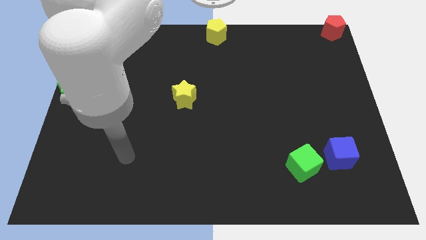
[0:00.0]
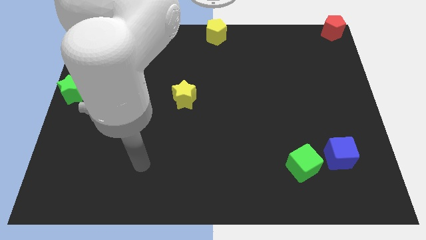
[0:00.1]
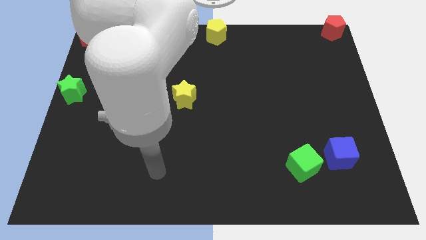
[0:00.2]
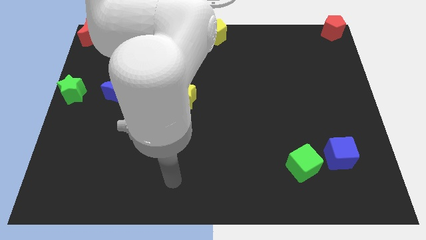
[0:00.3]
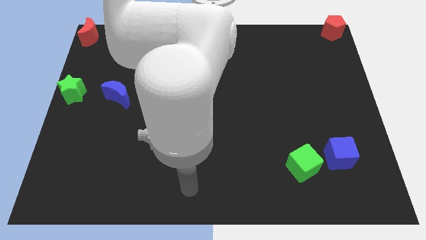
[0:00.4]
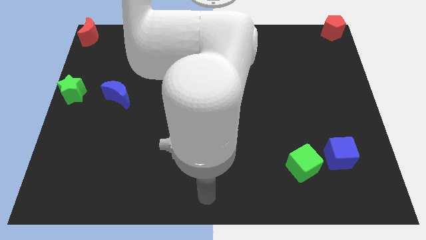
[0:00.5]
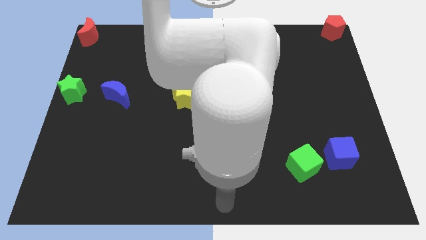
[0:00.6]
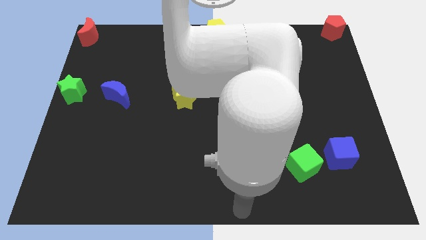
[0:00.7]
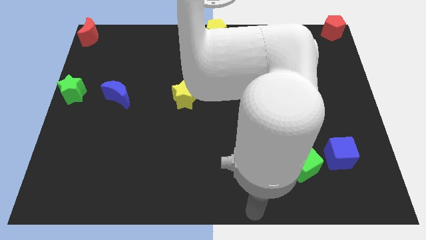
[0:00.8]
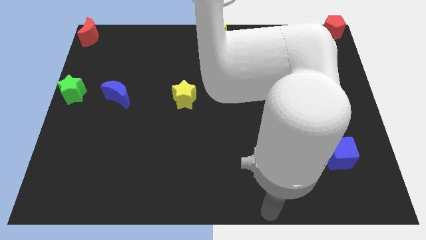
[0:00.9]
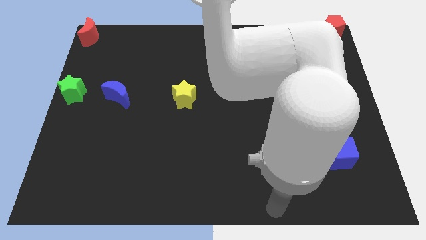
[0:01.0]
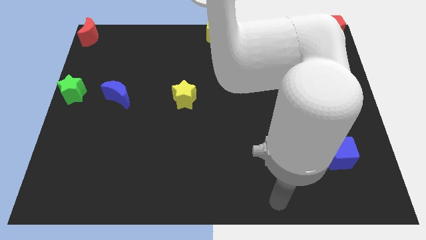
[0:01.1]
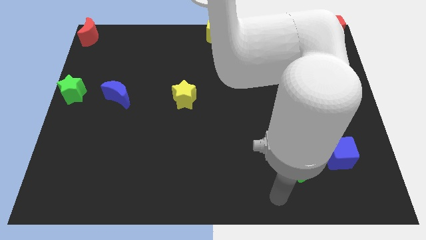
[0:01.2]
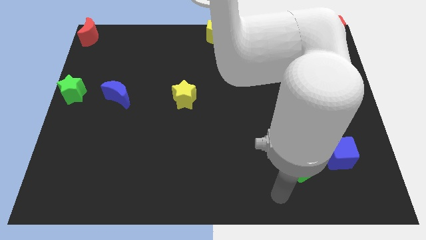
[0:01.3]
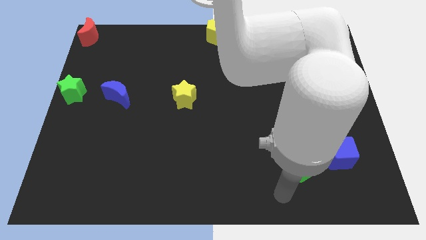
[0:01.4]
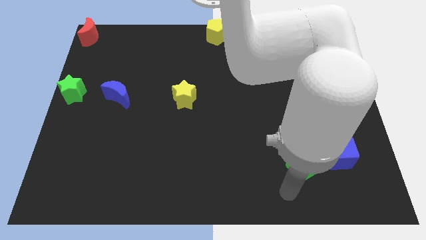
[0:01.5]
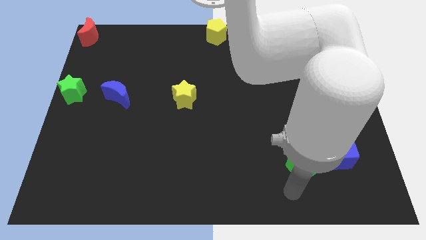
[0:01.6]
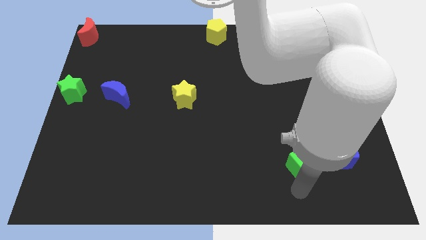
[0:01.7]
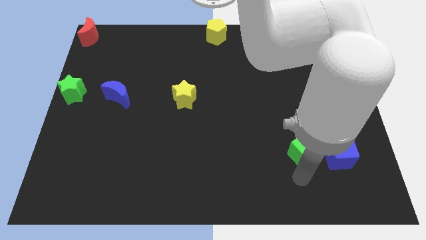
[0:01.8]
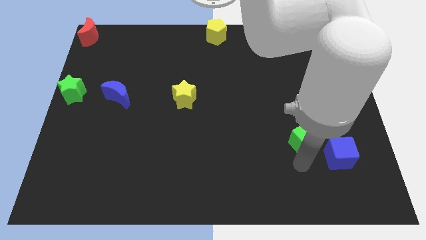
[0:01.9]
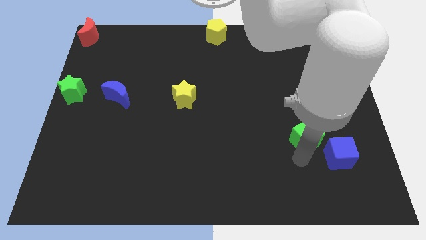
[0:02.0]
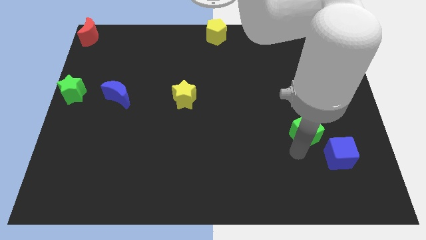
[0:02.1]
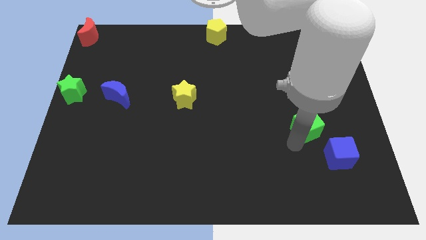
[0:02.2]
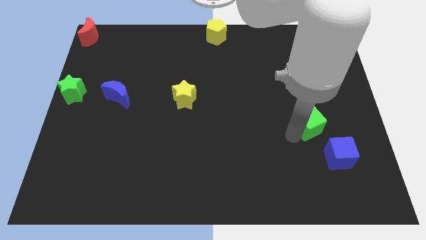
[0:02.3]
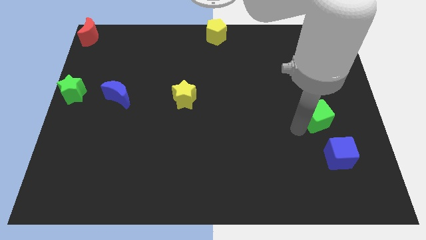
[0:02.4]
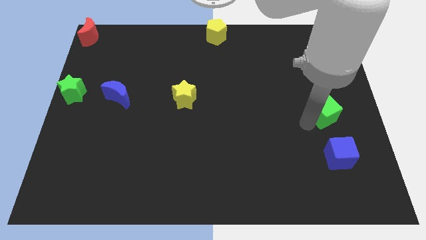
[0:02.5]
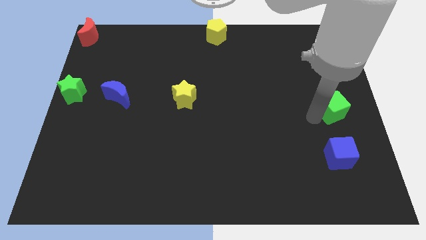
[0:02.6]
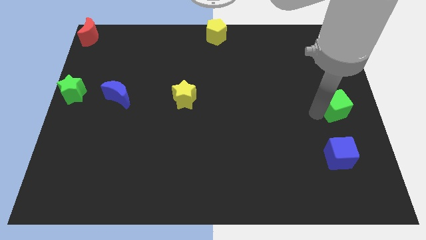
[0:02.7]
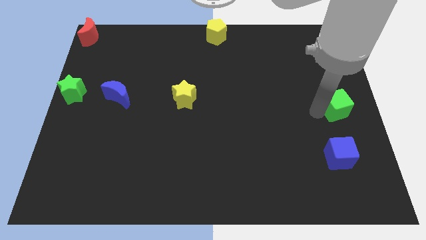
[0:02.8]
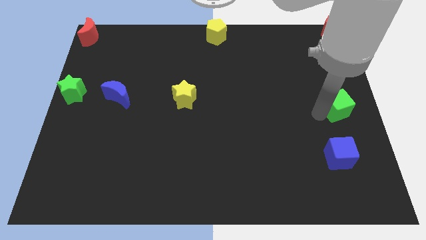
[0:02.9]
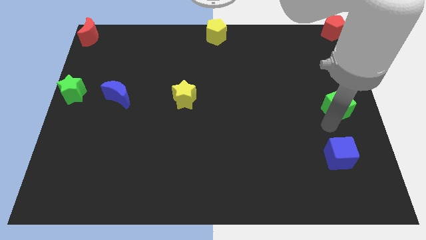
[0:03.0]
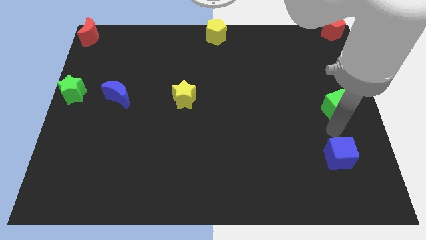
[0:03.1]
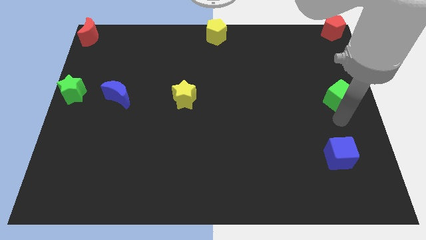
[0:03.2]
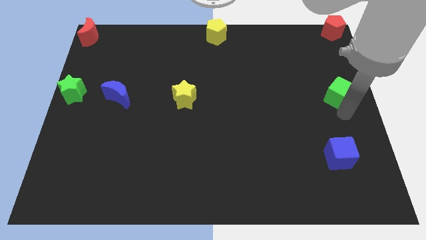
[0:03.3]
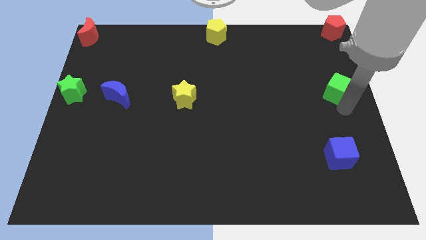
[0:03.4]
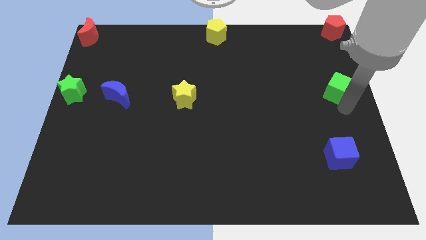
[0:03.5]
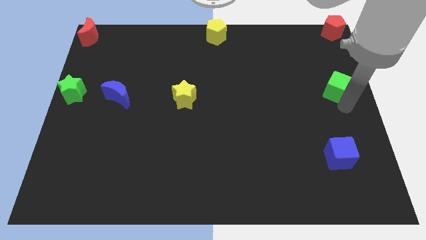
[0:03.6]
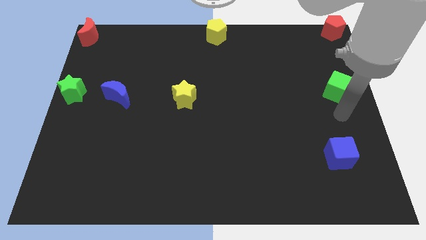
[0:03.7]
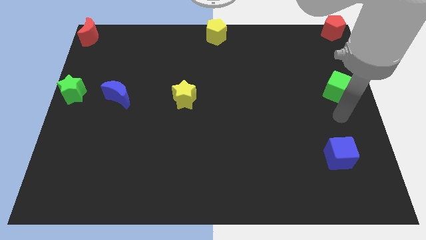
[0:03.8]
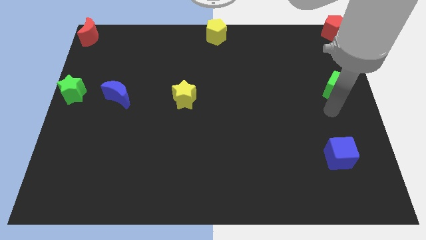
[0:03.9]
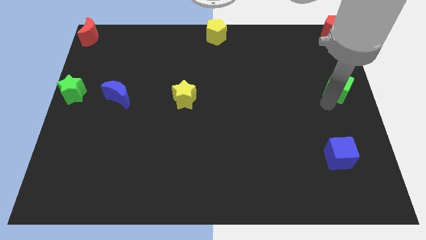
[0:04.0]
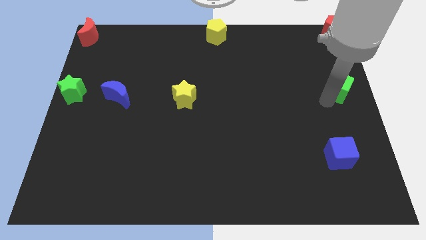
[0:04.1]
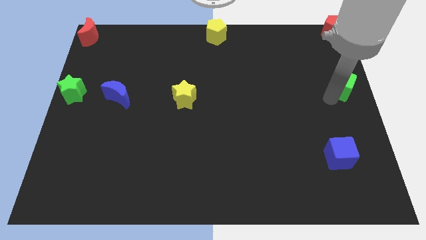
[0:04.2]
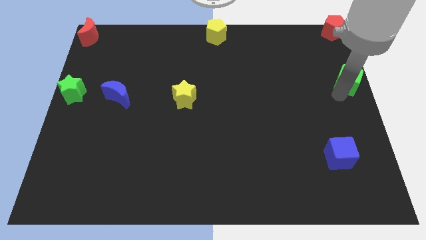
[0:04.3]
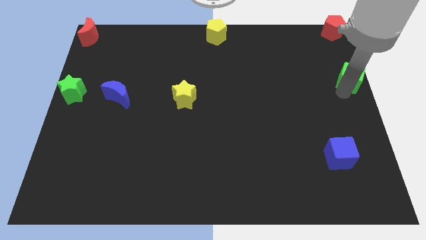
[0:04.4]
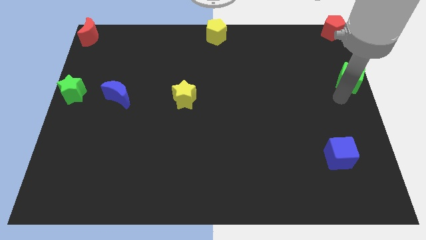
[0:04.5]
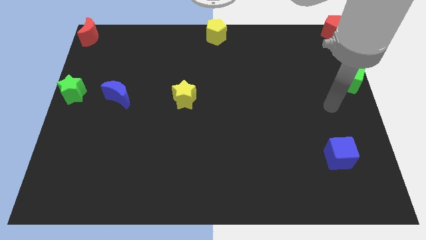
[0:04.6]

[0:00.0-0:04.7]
drag the green cube towards the center right of the board

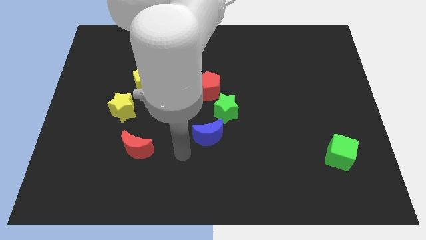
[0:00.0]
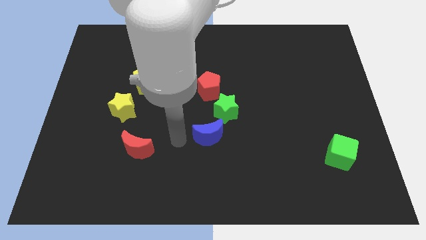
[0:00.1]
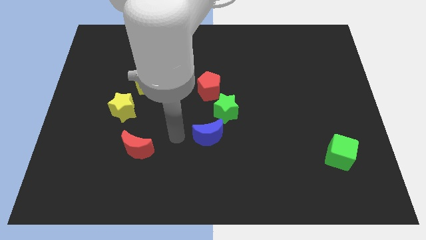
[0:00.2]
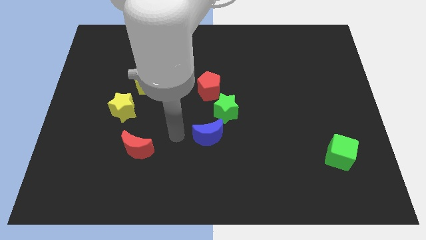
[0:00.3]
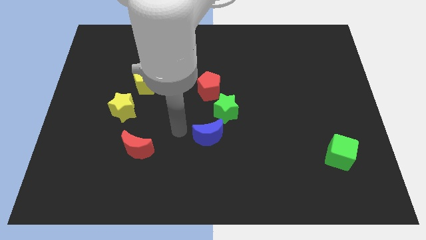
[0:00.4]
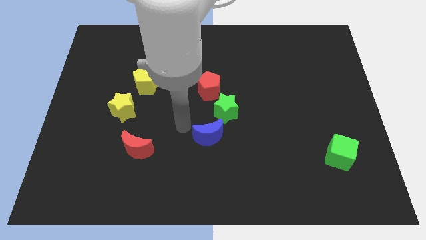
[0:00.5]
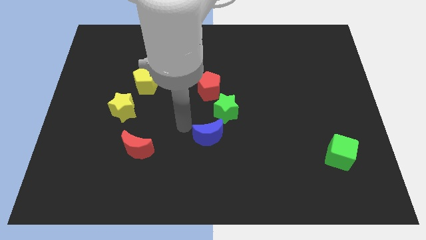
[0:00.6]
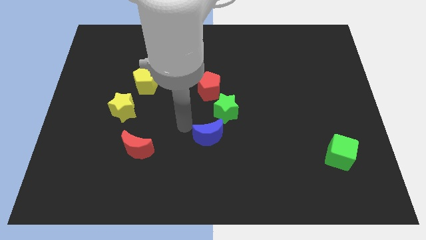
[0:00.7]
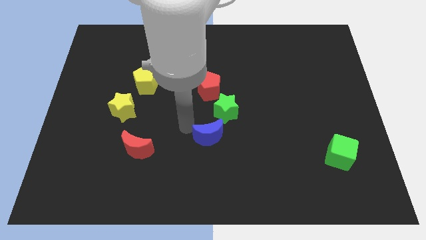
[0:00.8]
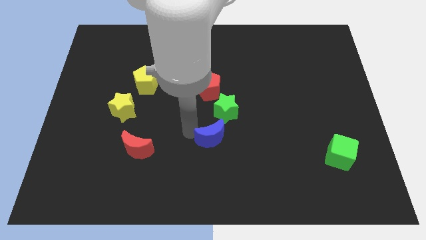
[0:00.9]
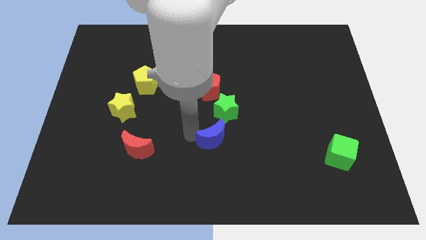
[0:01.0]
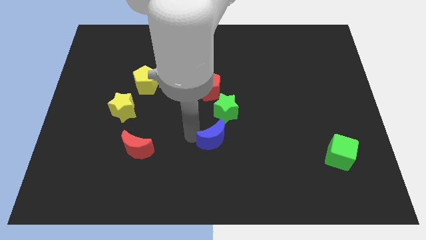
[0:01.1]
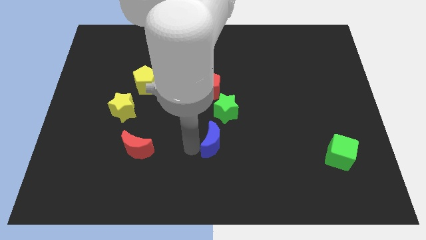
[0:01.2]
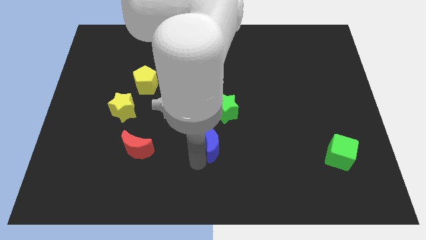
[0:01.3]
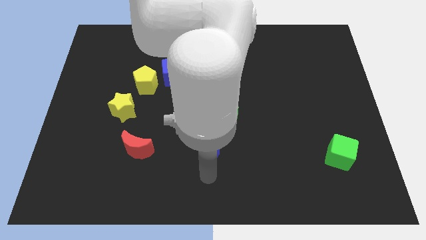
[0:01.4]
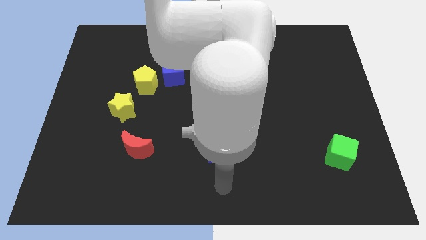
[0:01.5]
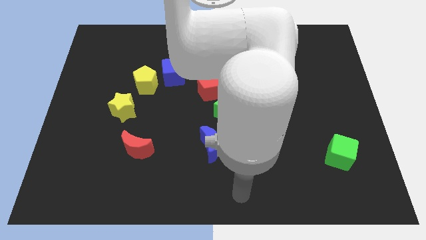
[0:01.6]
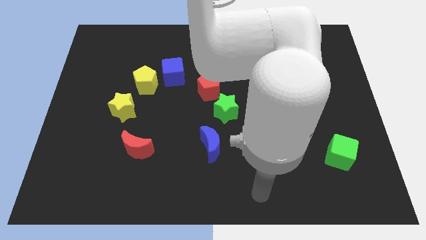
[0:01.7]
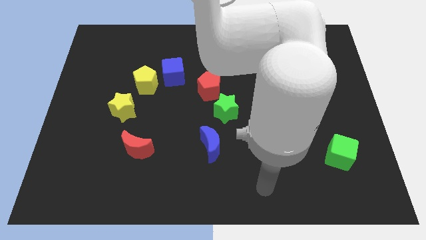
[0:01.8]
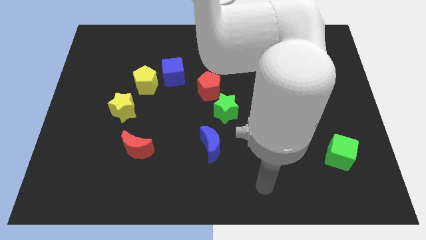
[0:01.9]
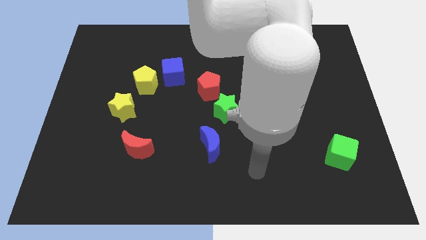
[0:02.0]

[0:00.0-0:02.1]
slightly turn the blue moon towards red moon

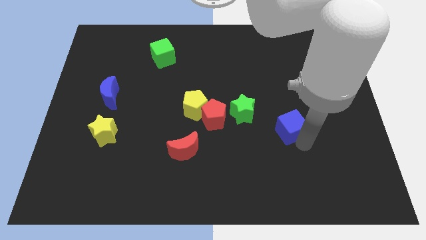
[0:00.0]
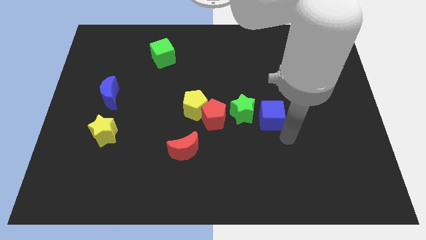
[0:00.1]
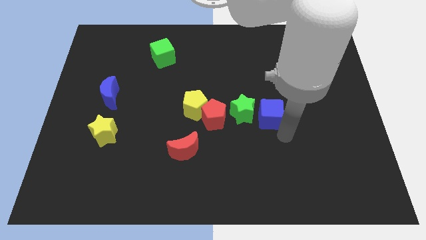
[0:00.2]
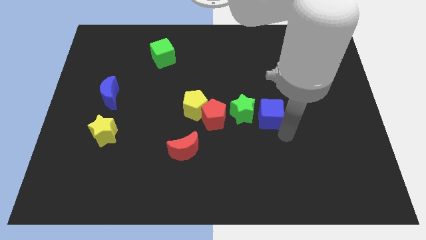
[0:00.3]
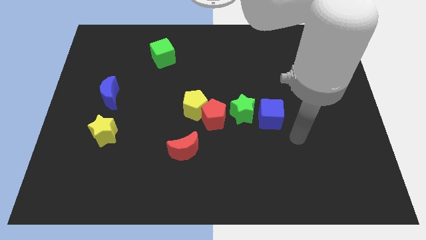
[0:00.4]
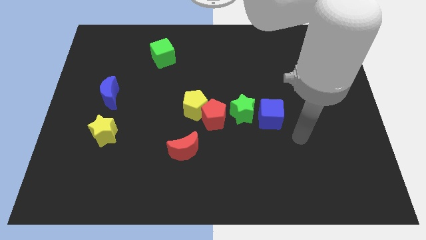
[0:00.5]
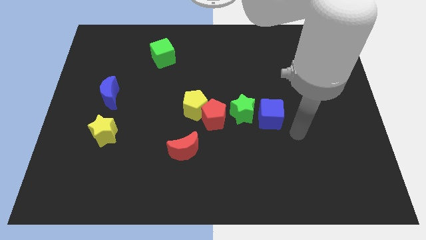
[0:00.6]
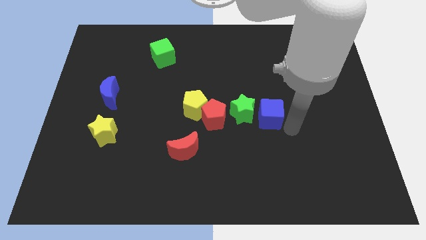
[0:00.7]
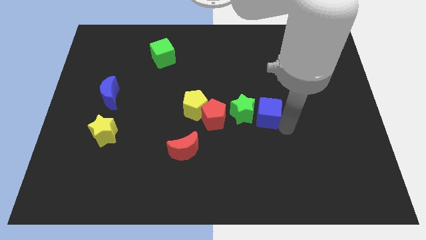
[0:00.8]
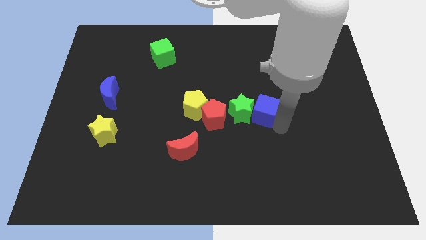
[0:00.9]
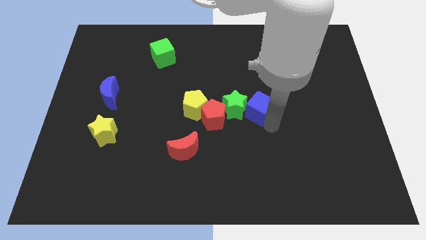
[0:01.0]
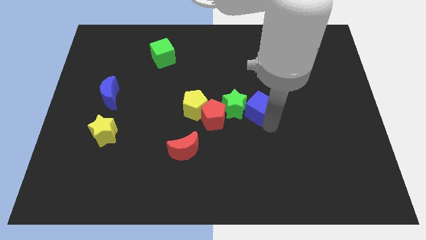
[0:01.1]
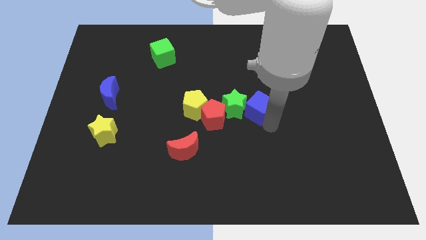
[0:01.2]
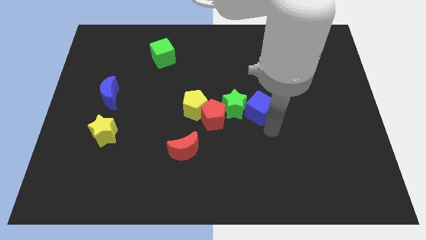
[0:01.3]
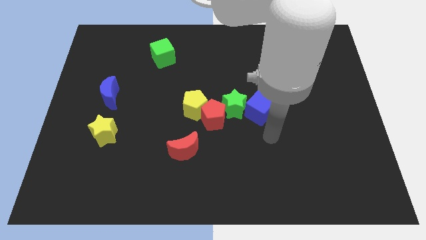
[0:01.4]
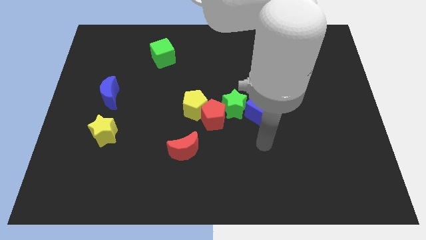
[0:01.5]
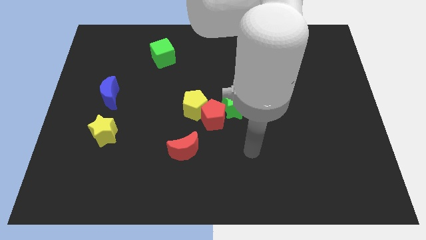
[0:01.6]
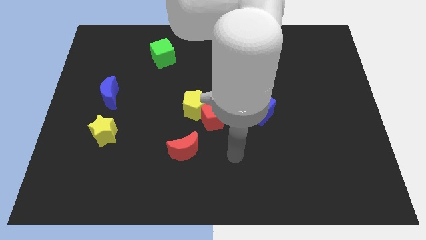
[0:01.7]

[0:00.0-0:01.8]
put the blue cube into green star to the right

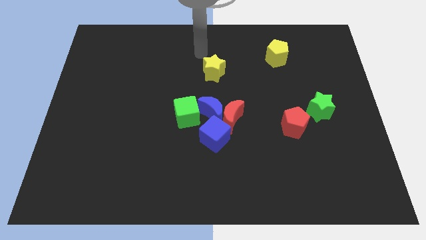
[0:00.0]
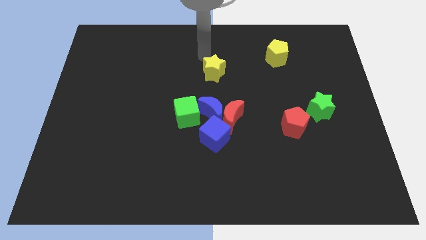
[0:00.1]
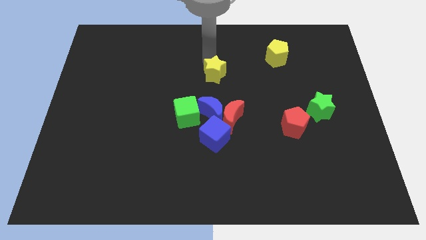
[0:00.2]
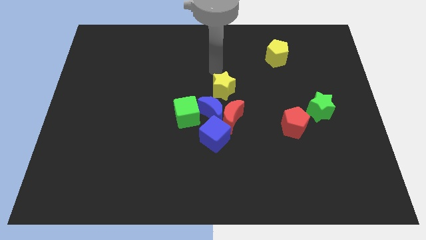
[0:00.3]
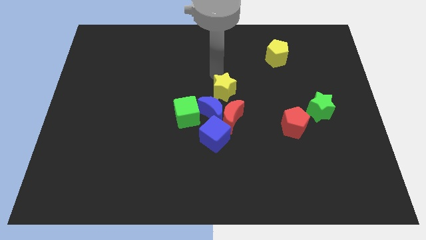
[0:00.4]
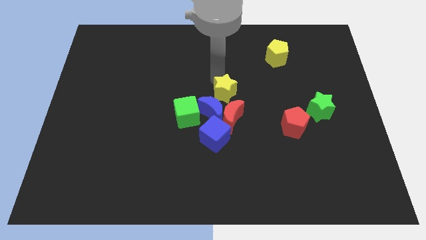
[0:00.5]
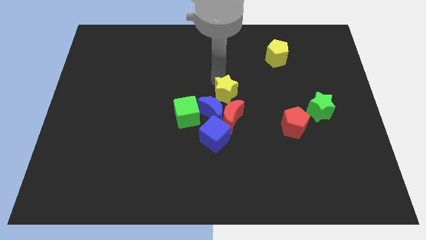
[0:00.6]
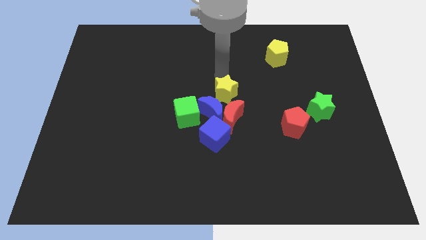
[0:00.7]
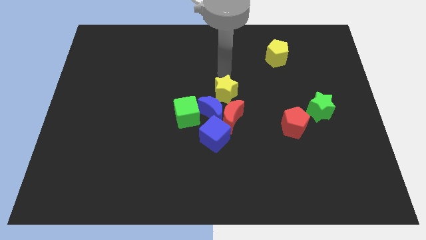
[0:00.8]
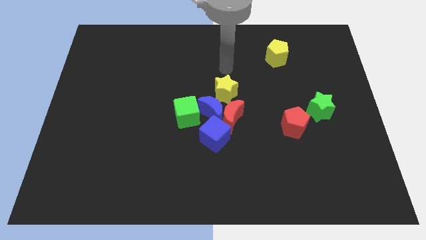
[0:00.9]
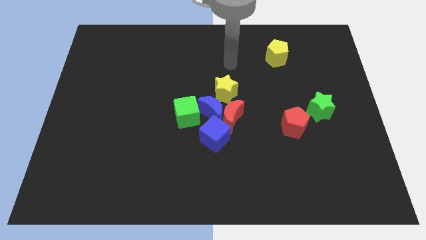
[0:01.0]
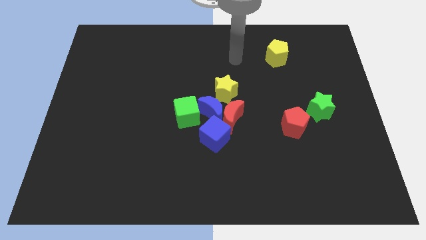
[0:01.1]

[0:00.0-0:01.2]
move the yellow star above the red moon
